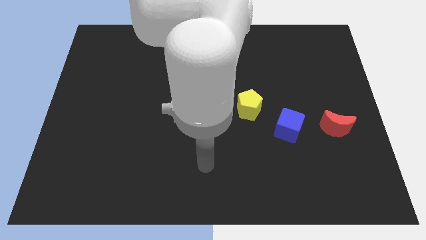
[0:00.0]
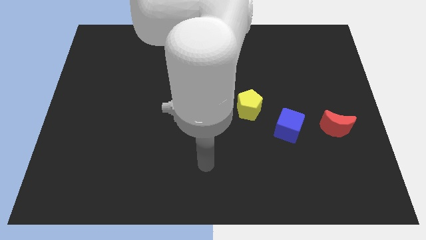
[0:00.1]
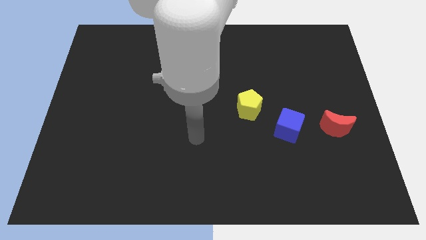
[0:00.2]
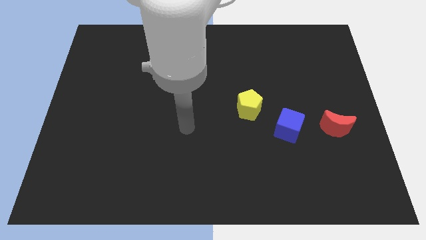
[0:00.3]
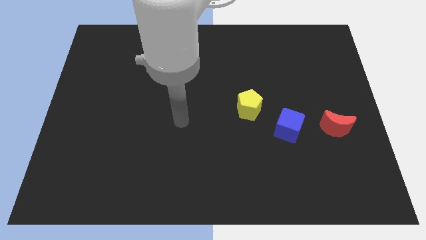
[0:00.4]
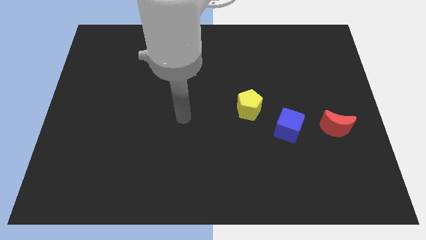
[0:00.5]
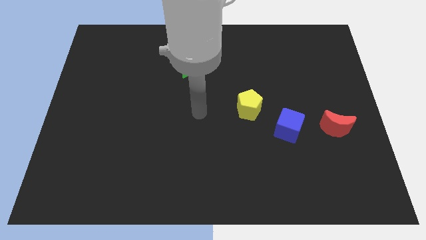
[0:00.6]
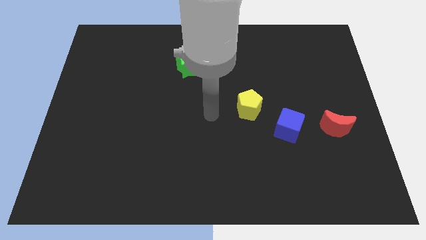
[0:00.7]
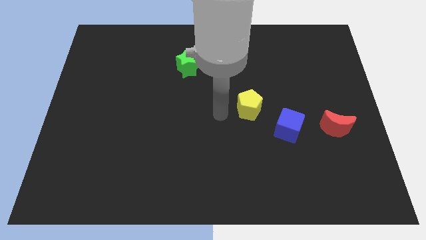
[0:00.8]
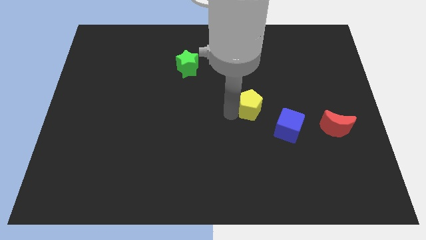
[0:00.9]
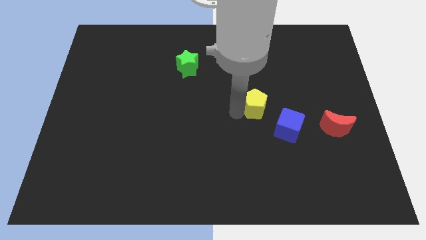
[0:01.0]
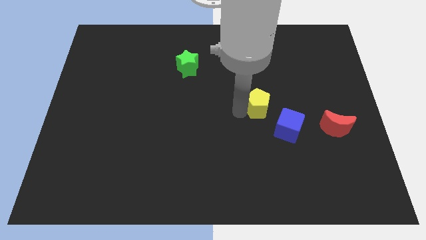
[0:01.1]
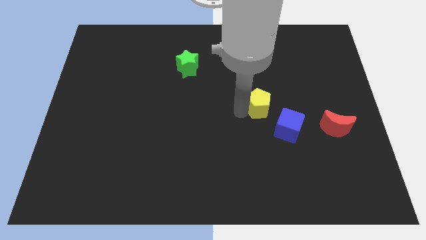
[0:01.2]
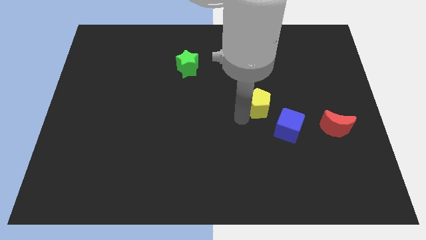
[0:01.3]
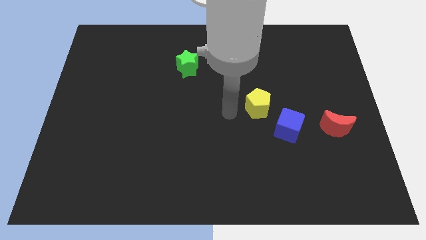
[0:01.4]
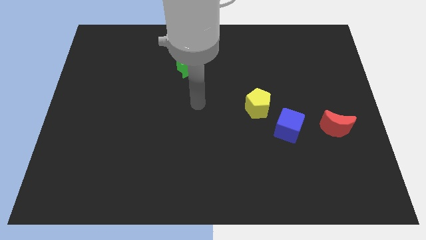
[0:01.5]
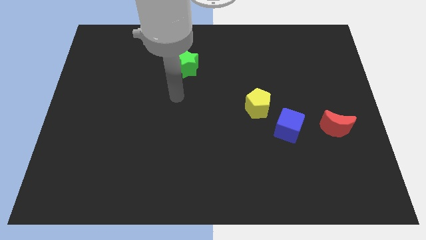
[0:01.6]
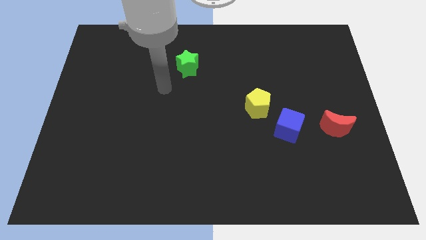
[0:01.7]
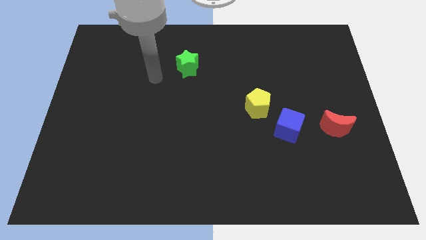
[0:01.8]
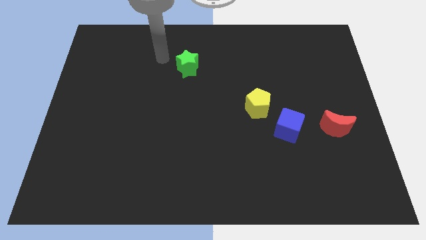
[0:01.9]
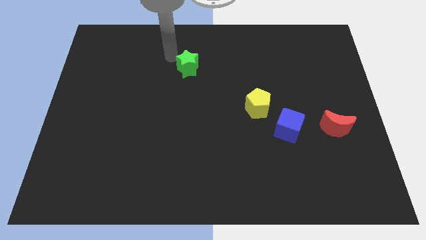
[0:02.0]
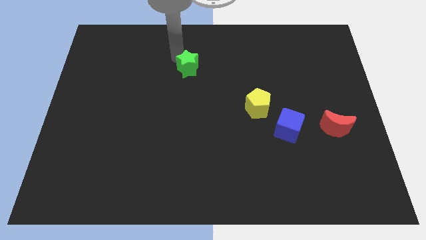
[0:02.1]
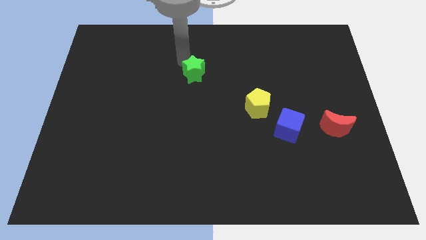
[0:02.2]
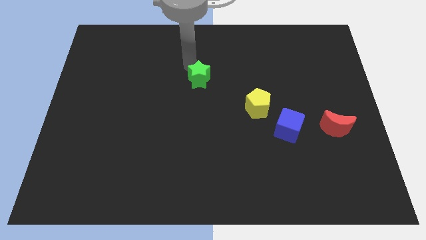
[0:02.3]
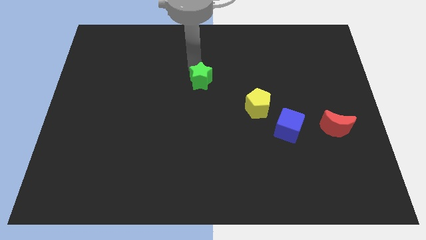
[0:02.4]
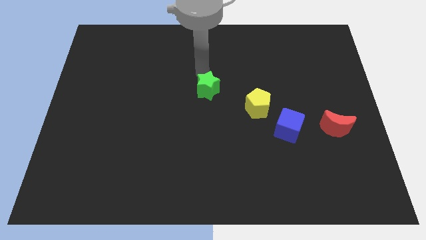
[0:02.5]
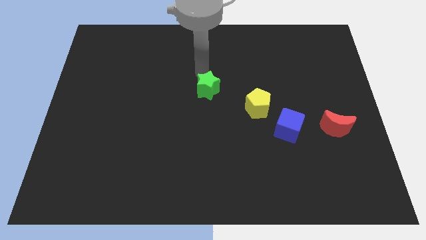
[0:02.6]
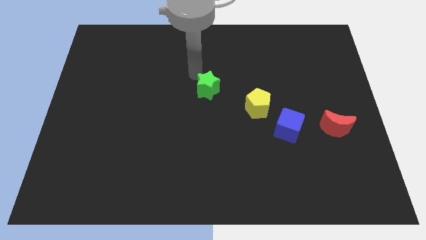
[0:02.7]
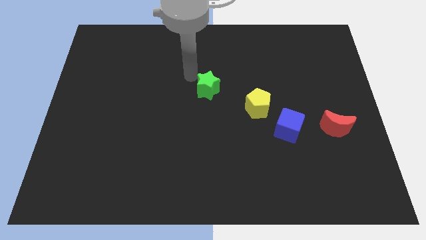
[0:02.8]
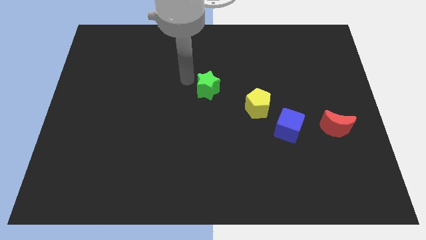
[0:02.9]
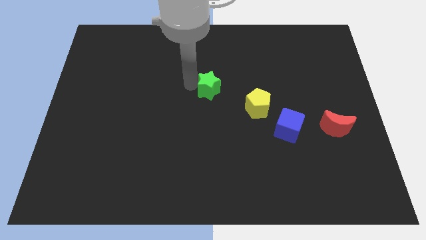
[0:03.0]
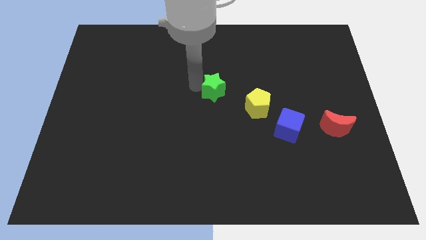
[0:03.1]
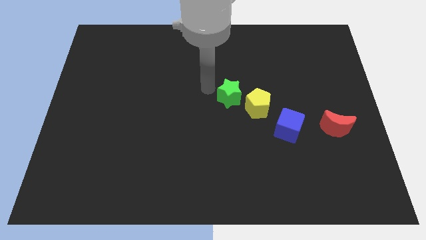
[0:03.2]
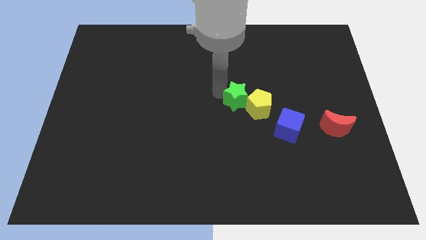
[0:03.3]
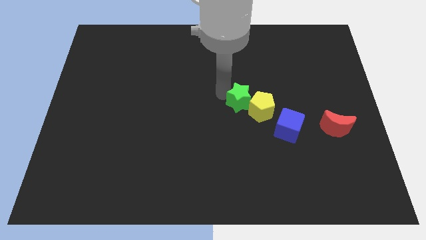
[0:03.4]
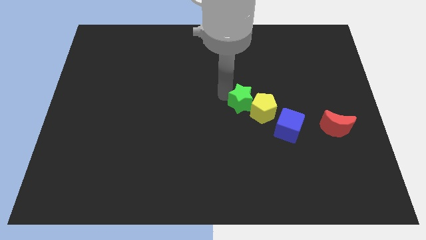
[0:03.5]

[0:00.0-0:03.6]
put the green block to the yellow pentagon

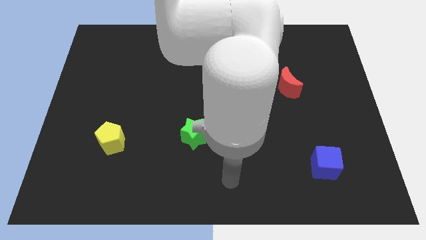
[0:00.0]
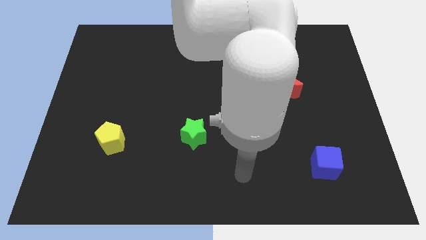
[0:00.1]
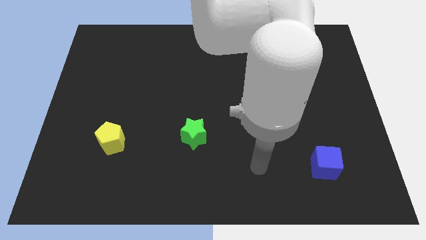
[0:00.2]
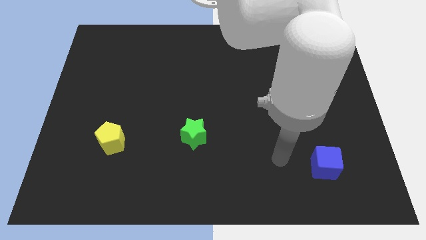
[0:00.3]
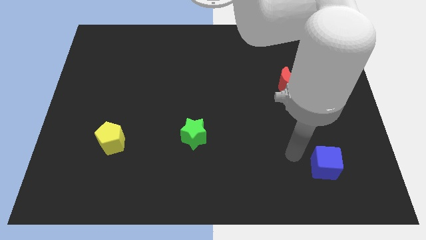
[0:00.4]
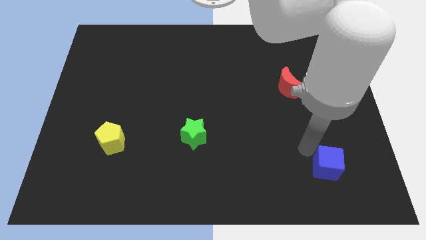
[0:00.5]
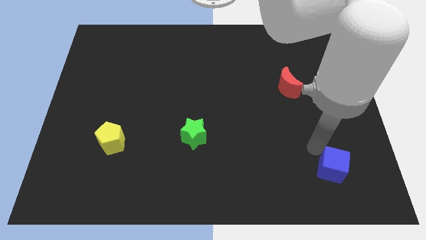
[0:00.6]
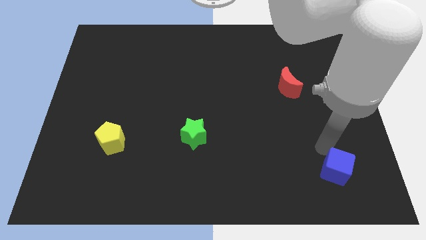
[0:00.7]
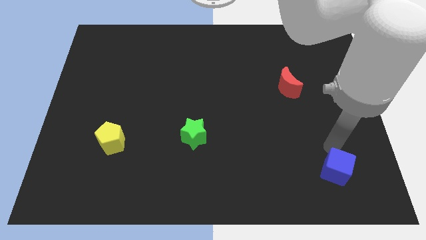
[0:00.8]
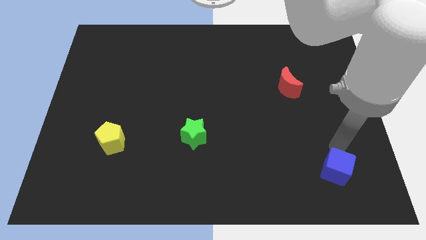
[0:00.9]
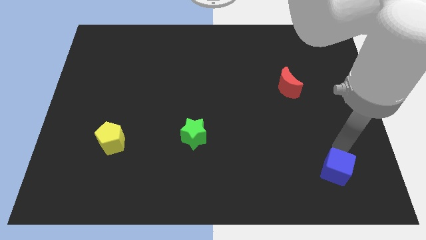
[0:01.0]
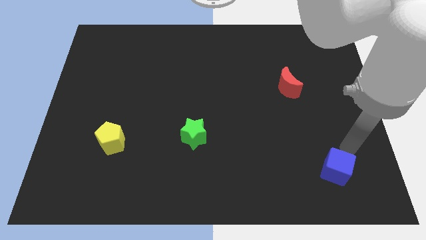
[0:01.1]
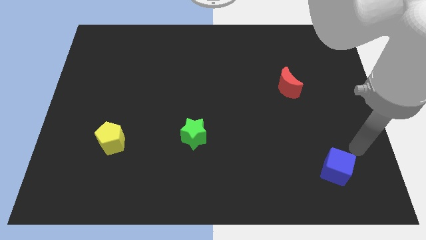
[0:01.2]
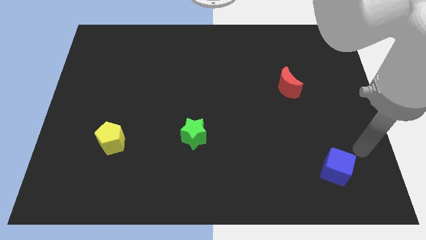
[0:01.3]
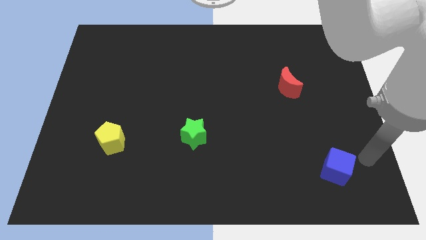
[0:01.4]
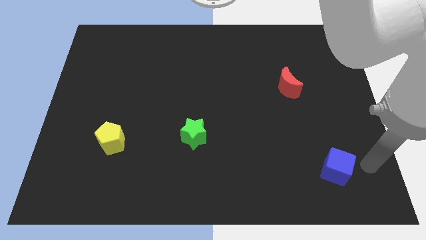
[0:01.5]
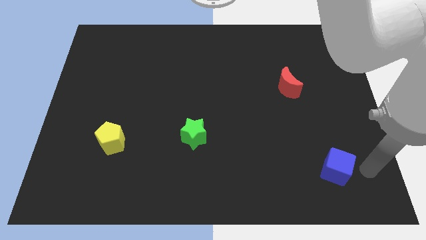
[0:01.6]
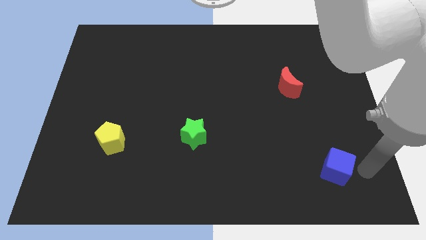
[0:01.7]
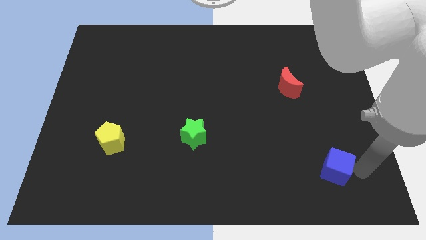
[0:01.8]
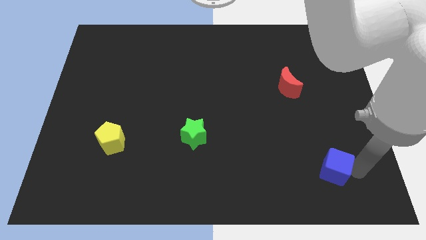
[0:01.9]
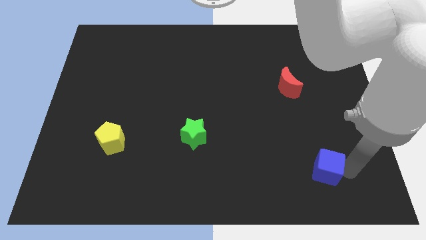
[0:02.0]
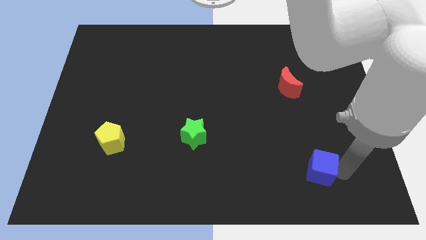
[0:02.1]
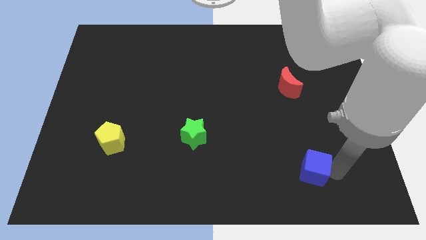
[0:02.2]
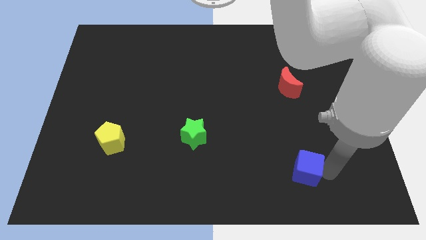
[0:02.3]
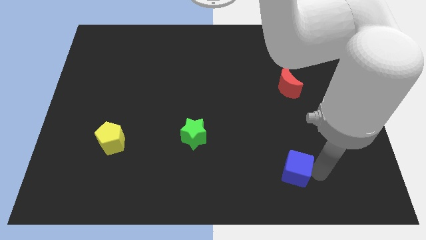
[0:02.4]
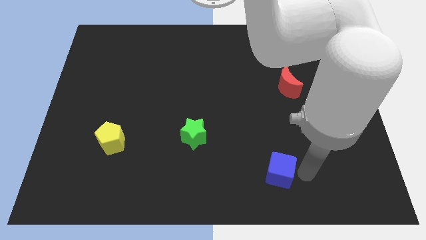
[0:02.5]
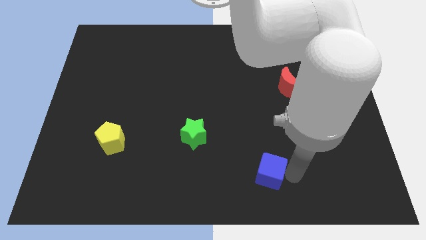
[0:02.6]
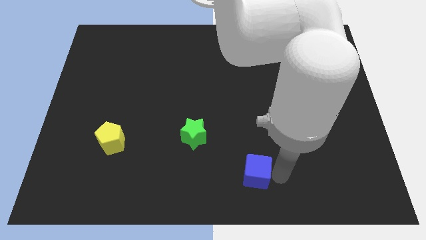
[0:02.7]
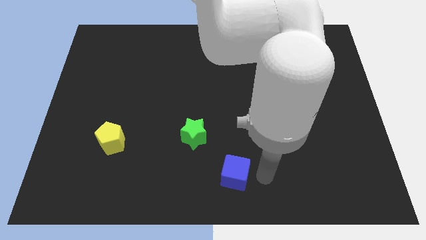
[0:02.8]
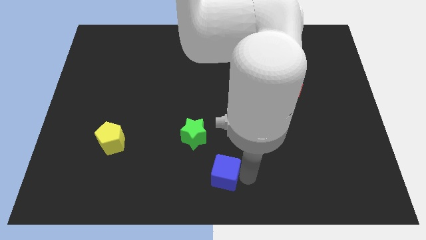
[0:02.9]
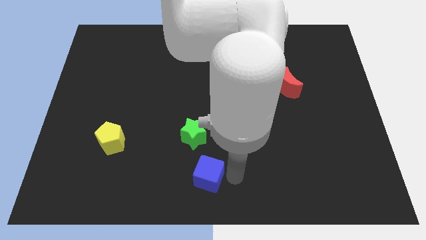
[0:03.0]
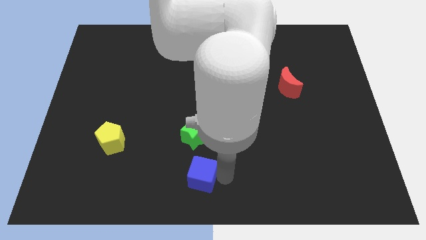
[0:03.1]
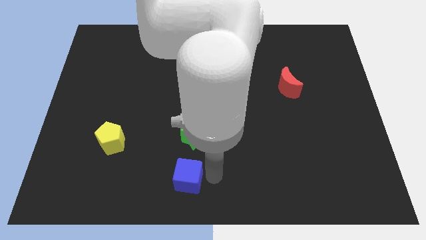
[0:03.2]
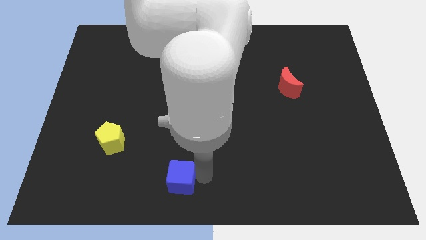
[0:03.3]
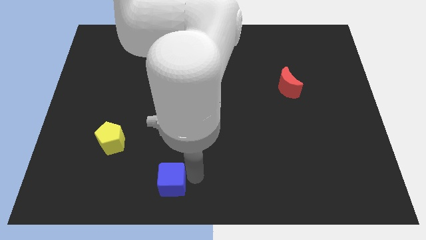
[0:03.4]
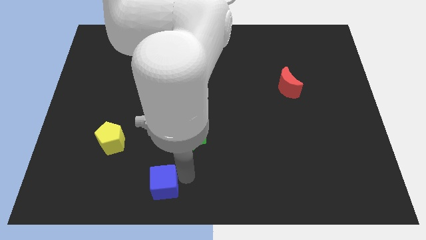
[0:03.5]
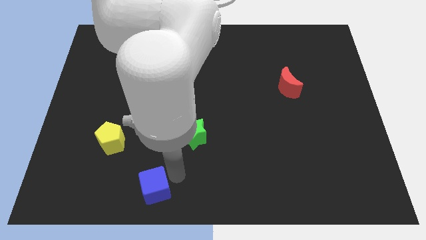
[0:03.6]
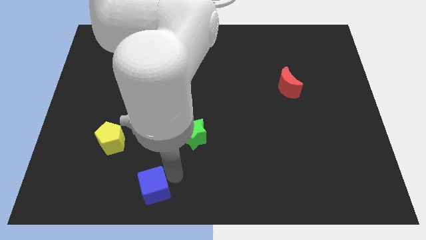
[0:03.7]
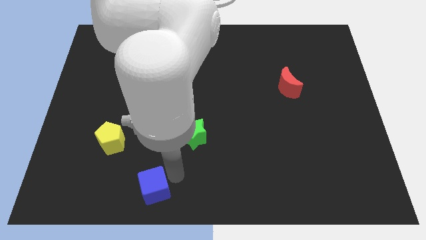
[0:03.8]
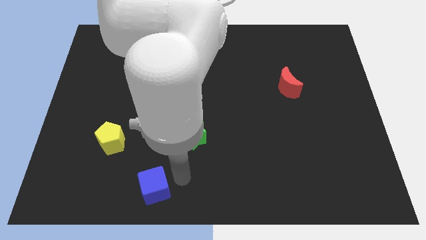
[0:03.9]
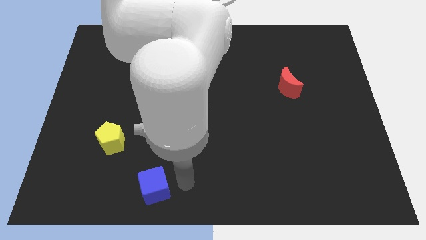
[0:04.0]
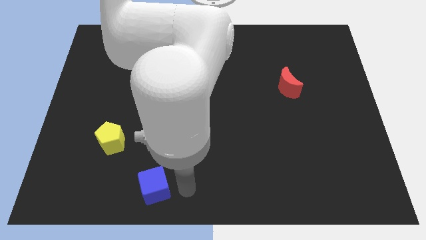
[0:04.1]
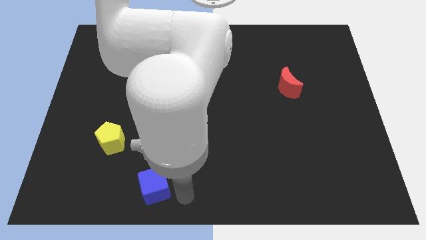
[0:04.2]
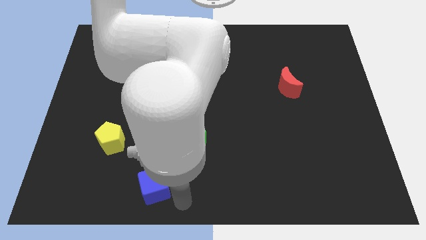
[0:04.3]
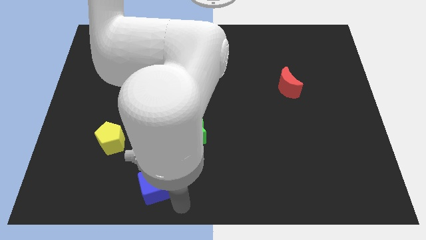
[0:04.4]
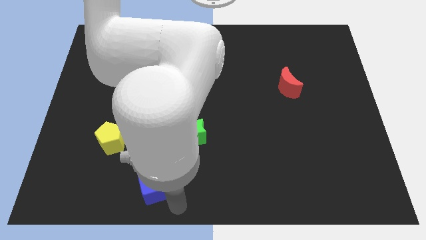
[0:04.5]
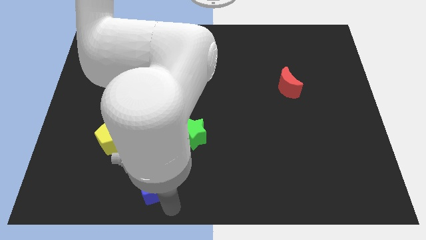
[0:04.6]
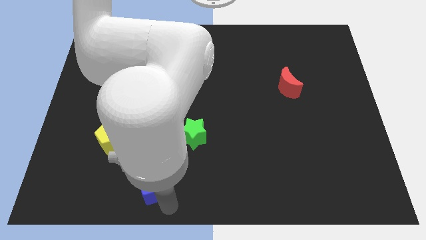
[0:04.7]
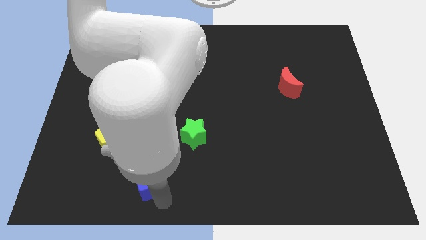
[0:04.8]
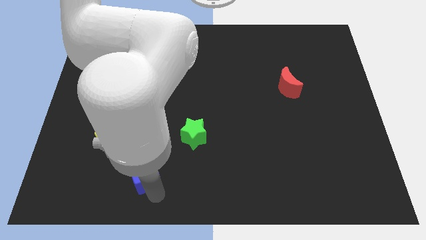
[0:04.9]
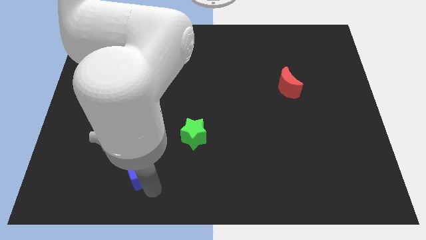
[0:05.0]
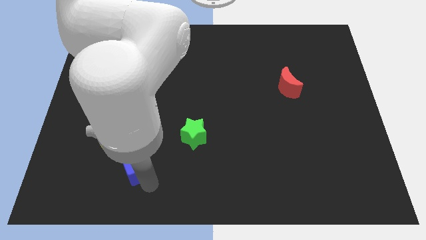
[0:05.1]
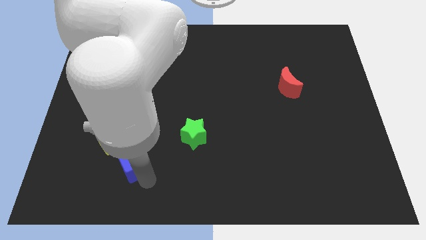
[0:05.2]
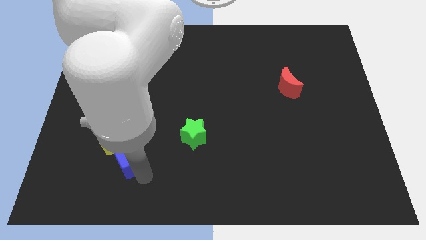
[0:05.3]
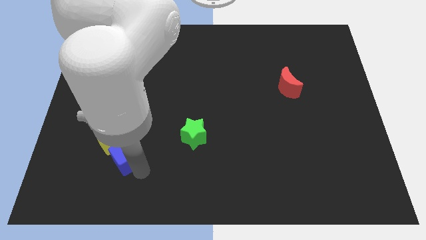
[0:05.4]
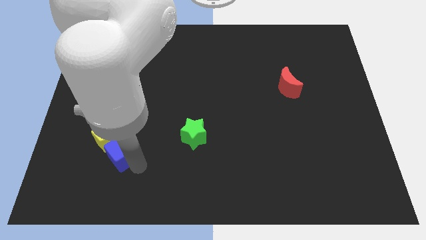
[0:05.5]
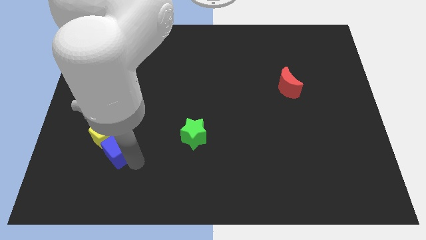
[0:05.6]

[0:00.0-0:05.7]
move the blue block next to the pentagon
